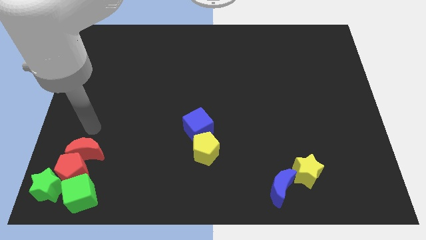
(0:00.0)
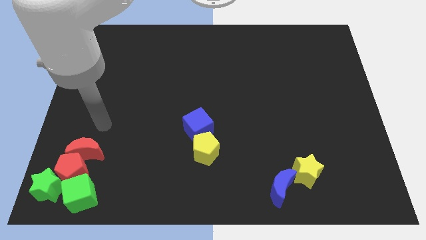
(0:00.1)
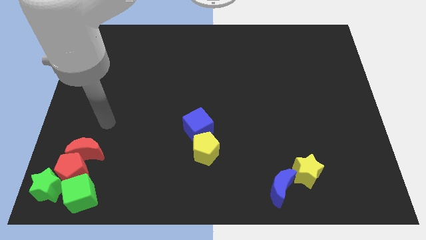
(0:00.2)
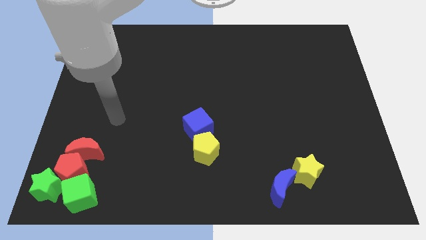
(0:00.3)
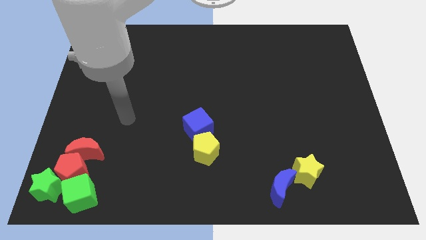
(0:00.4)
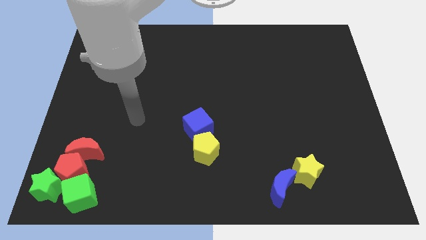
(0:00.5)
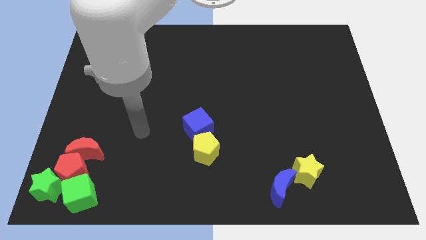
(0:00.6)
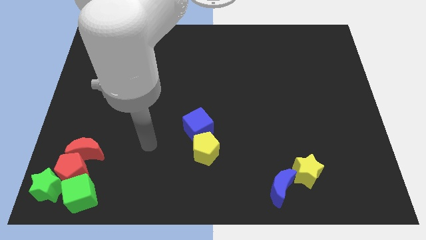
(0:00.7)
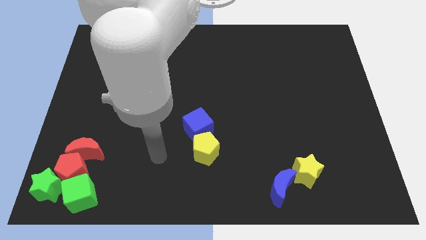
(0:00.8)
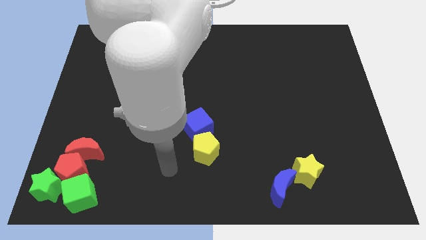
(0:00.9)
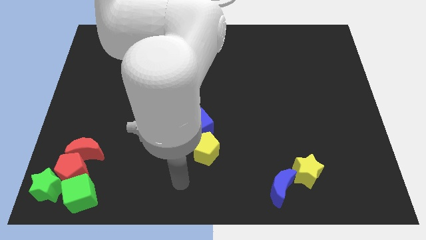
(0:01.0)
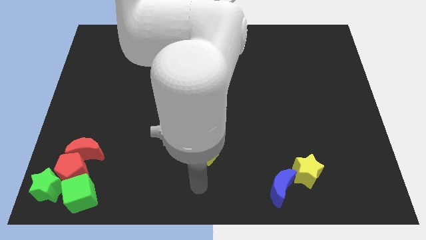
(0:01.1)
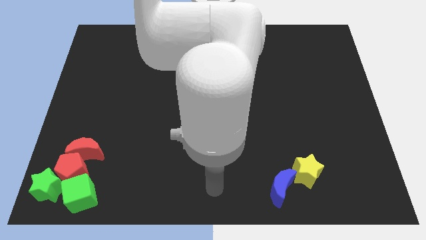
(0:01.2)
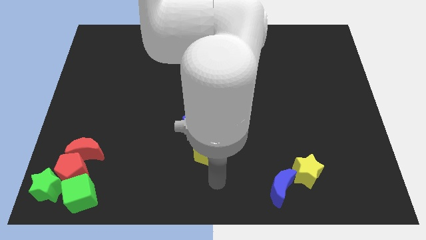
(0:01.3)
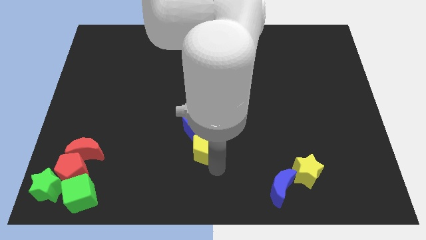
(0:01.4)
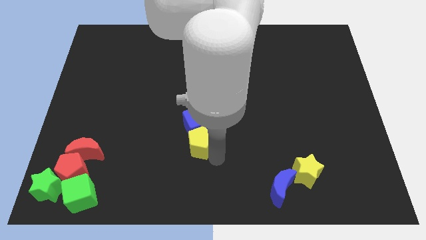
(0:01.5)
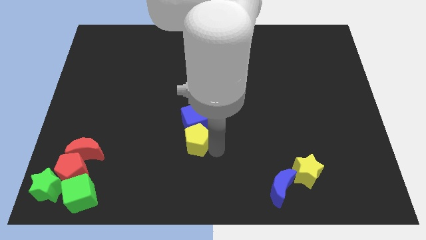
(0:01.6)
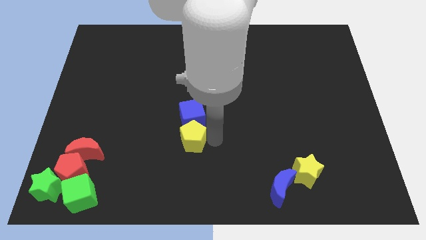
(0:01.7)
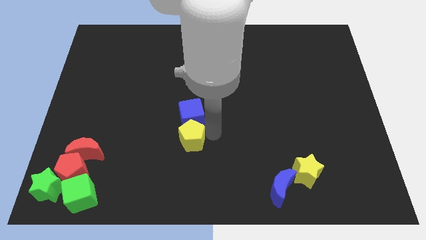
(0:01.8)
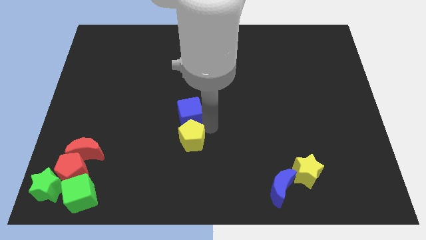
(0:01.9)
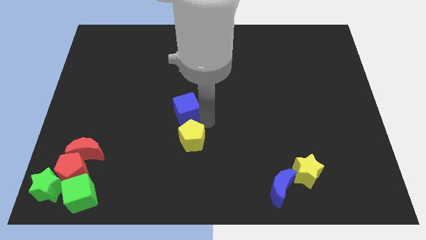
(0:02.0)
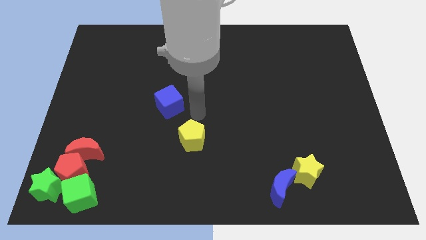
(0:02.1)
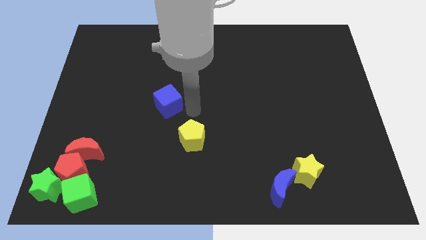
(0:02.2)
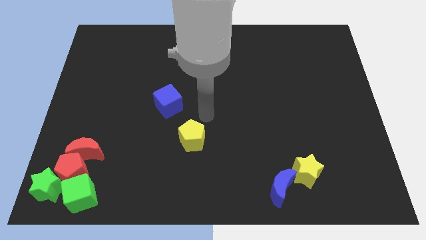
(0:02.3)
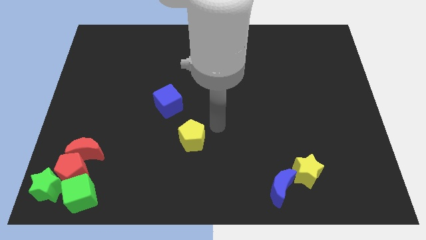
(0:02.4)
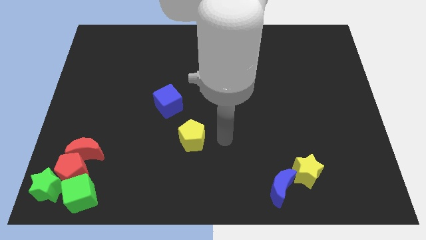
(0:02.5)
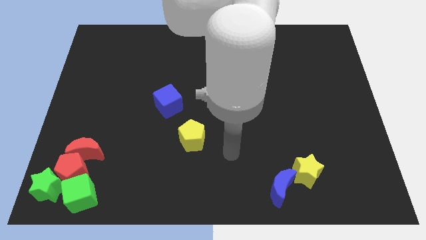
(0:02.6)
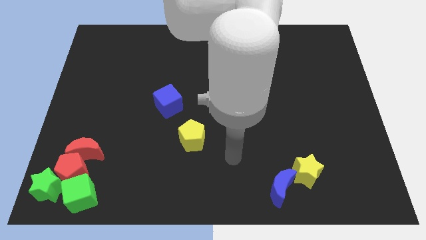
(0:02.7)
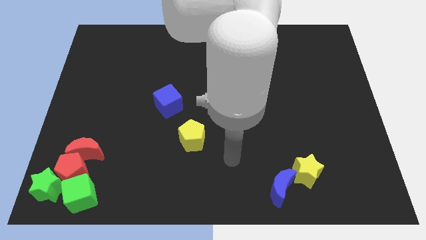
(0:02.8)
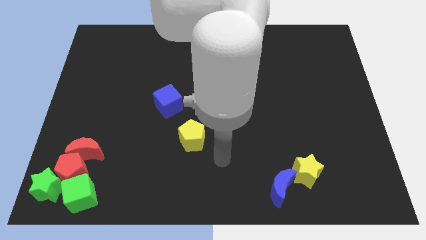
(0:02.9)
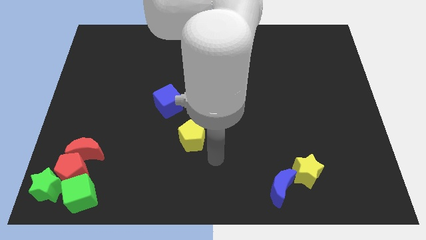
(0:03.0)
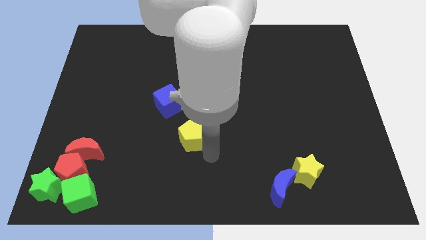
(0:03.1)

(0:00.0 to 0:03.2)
seprate the blue cube from the yellow pentagon

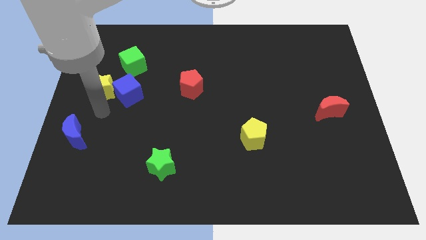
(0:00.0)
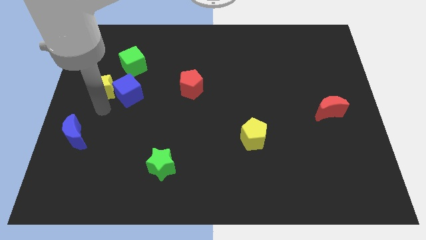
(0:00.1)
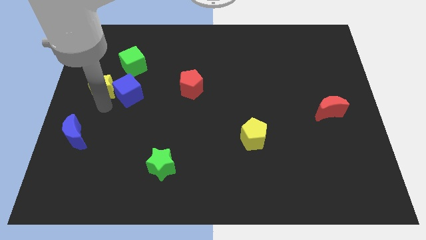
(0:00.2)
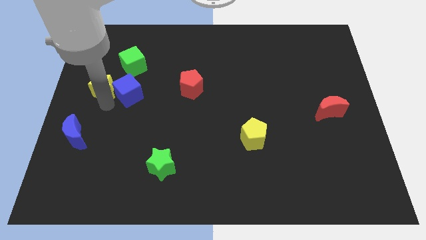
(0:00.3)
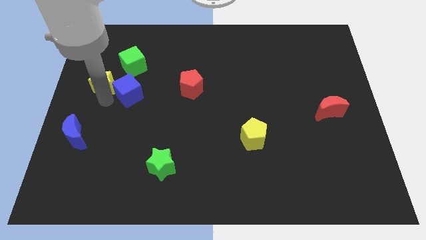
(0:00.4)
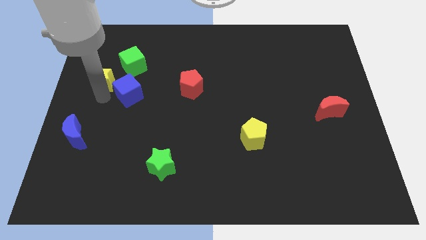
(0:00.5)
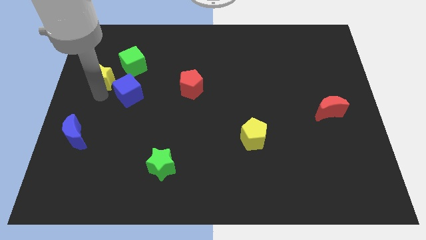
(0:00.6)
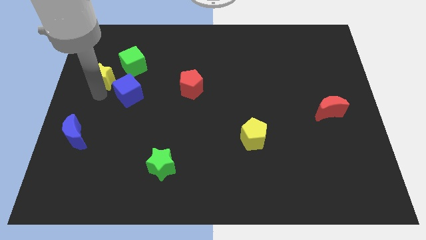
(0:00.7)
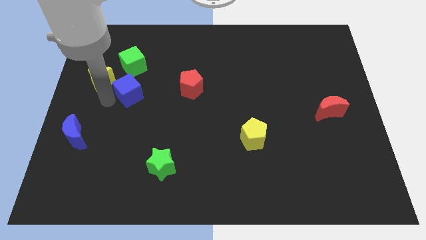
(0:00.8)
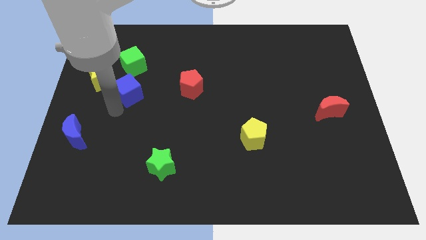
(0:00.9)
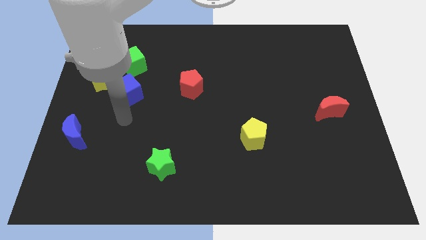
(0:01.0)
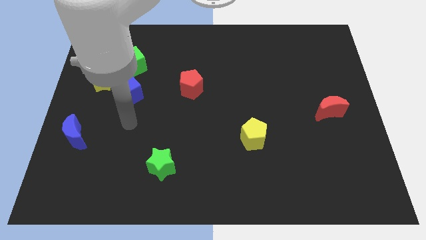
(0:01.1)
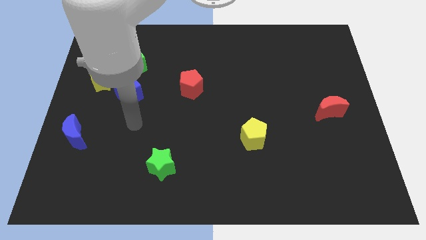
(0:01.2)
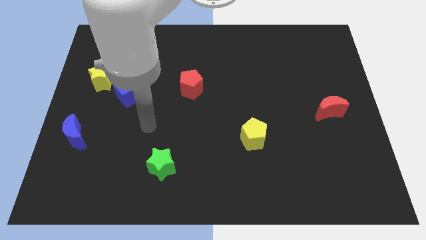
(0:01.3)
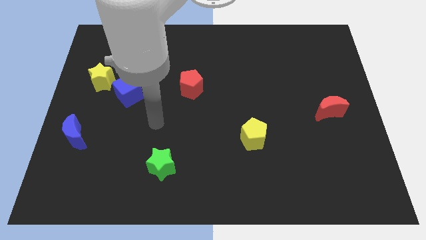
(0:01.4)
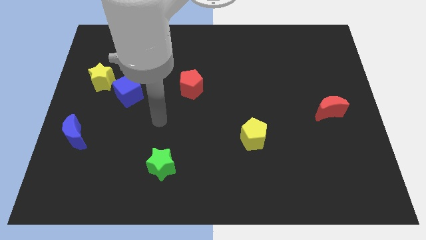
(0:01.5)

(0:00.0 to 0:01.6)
move the yellow start slightly to the top

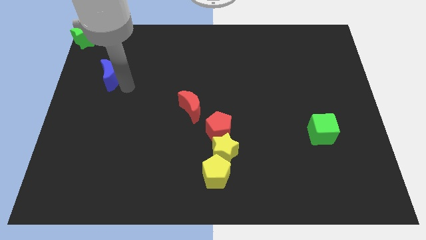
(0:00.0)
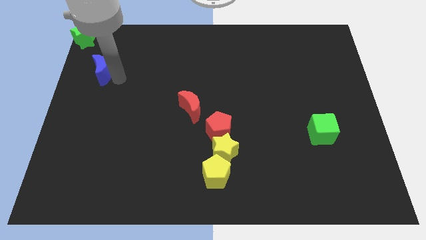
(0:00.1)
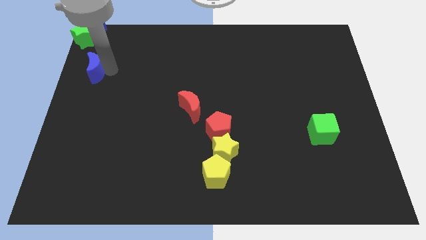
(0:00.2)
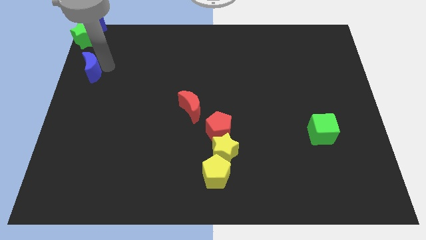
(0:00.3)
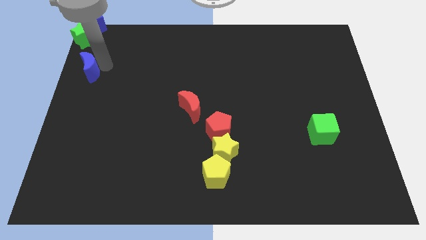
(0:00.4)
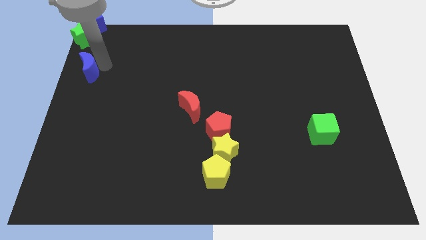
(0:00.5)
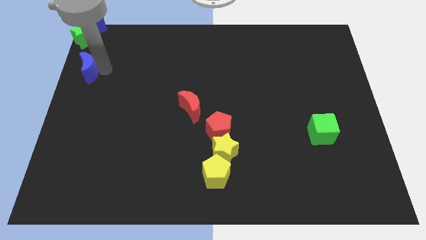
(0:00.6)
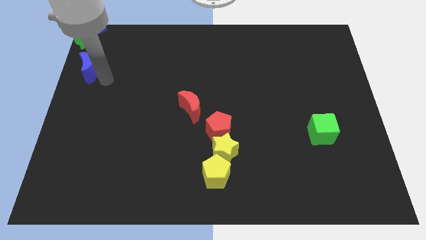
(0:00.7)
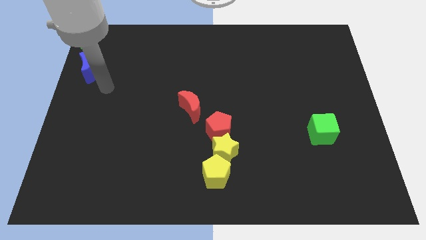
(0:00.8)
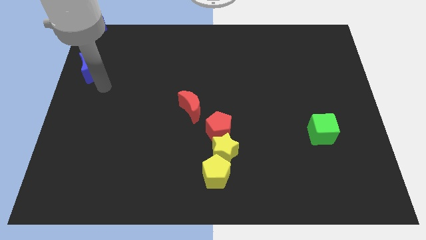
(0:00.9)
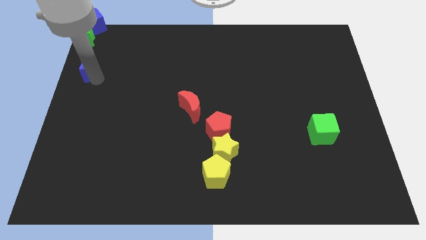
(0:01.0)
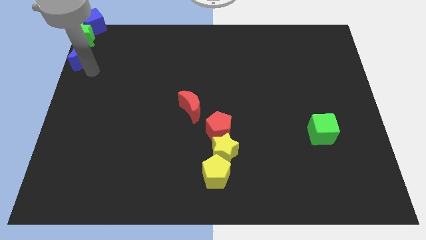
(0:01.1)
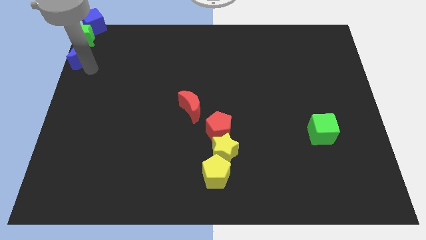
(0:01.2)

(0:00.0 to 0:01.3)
move the blue crescent below the green star

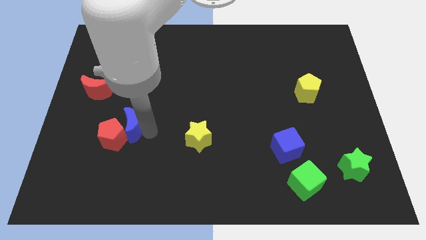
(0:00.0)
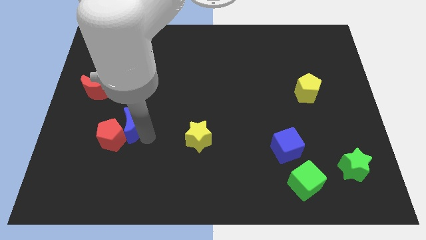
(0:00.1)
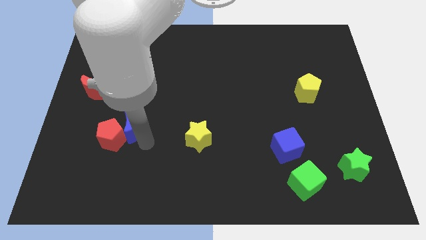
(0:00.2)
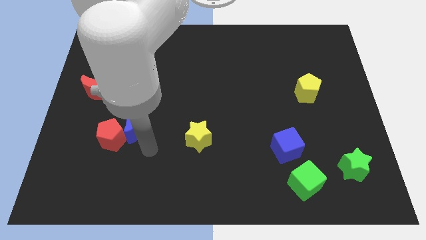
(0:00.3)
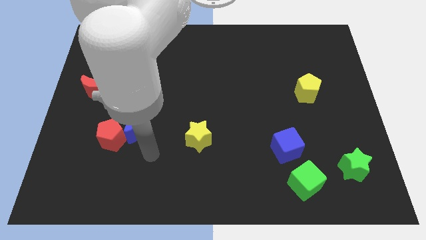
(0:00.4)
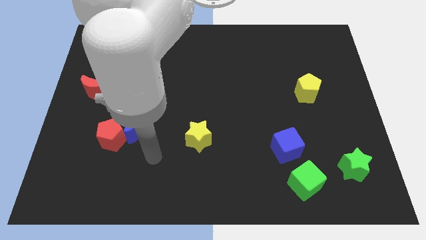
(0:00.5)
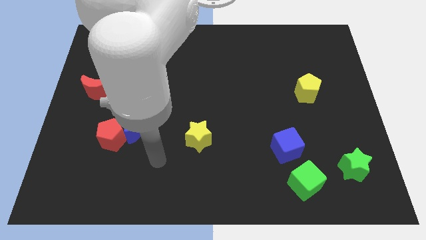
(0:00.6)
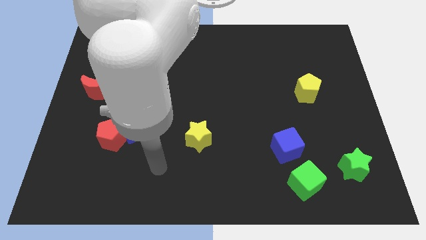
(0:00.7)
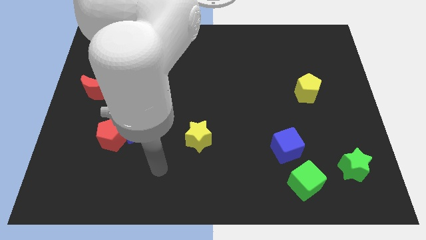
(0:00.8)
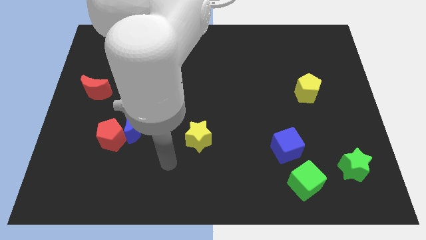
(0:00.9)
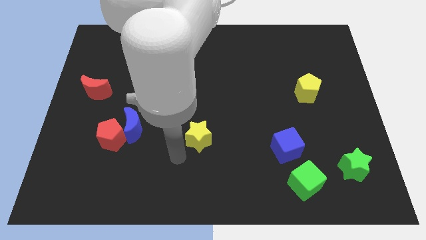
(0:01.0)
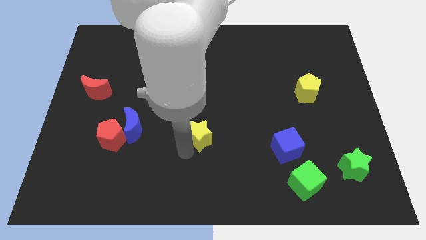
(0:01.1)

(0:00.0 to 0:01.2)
move arm to the yellow star

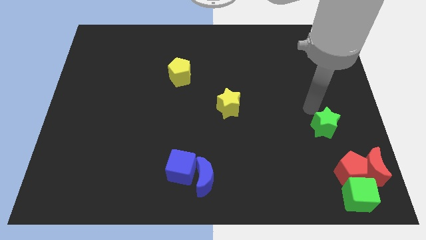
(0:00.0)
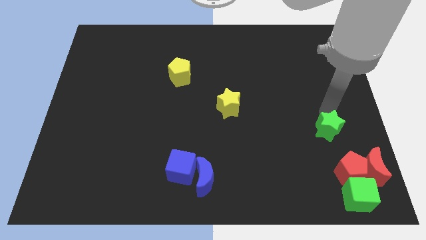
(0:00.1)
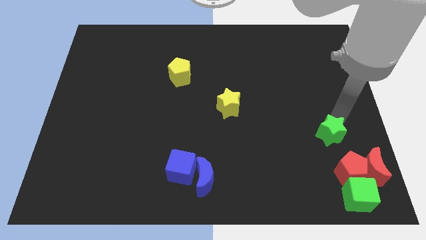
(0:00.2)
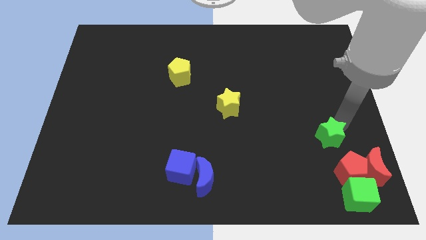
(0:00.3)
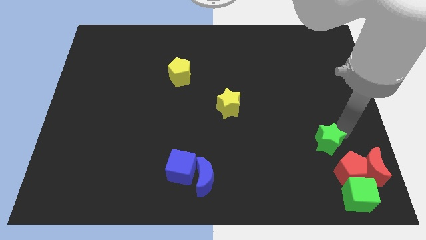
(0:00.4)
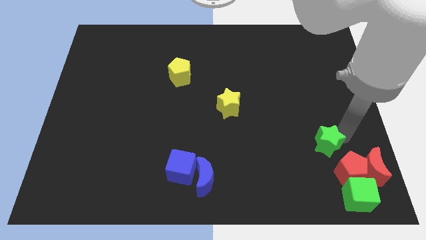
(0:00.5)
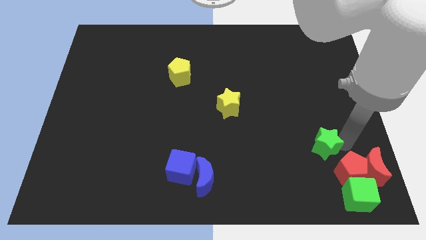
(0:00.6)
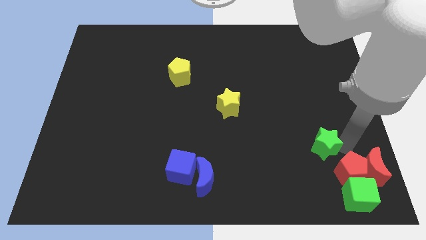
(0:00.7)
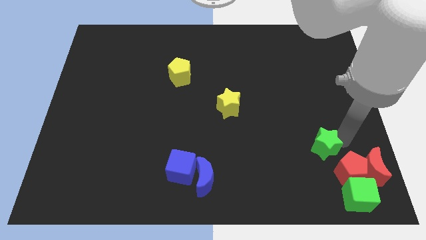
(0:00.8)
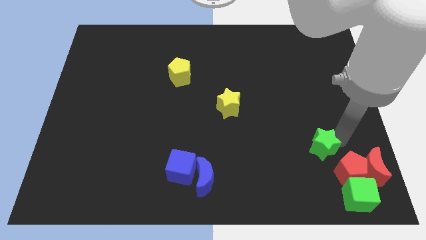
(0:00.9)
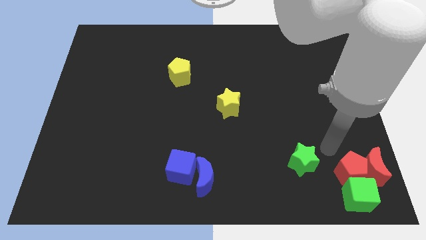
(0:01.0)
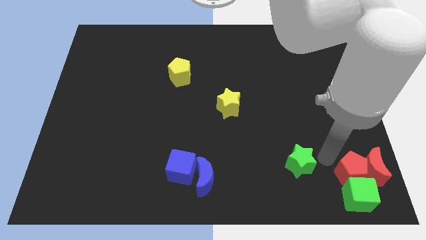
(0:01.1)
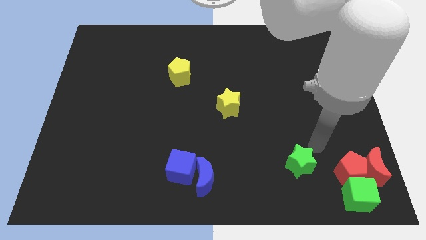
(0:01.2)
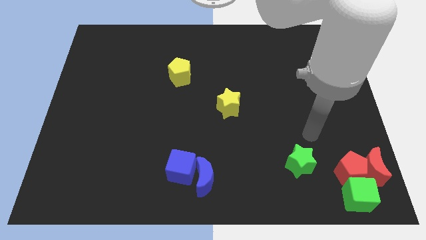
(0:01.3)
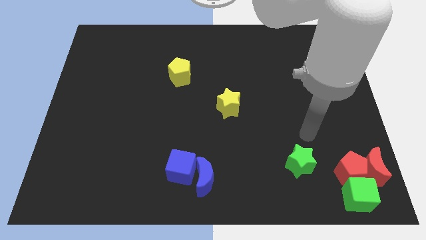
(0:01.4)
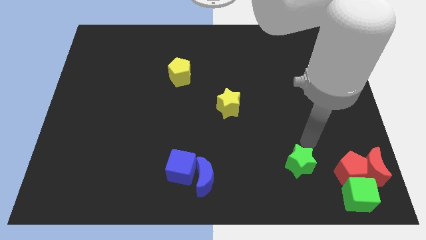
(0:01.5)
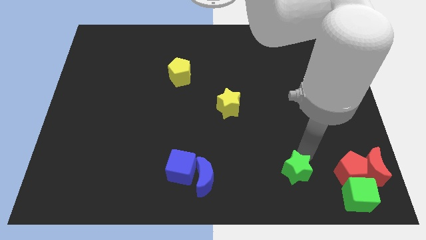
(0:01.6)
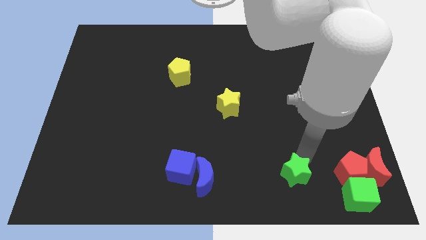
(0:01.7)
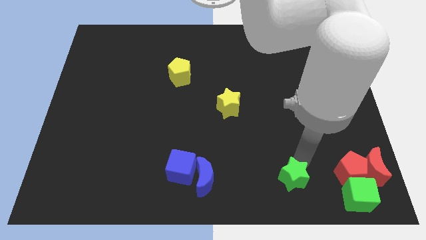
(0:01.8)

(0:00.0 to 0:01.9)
push the green star parallel to the blue crescent
